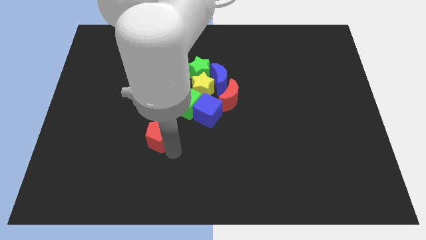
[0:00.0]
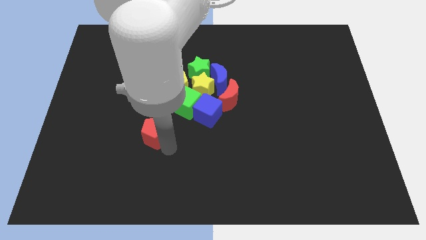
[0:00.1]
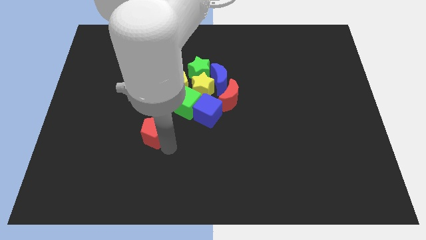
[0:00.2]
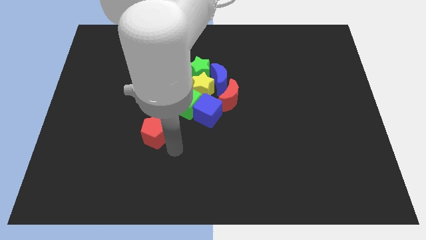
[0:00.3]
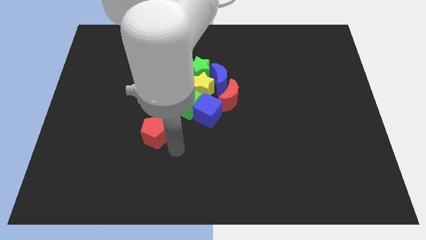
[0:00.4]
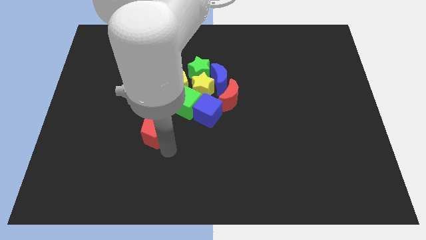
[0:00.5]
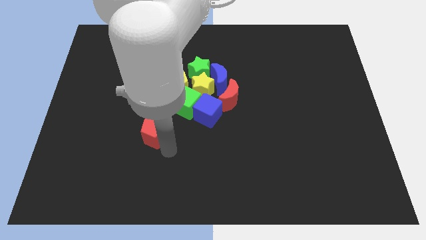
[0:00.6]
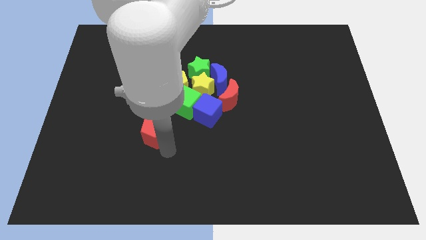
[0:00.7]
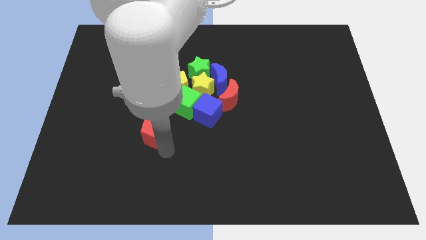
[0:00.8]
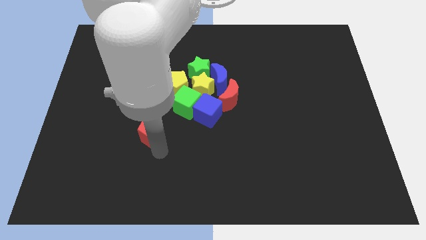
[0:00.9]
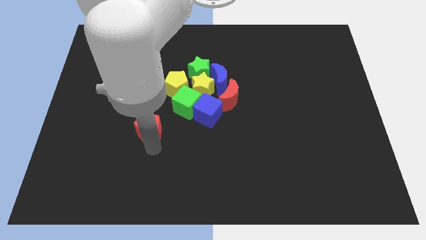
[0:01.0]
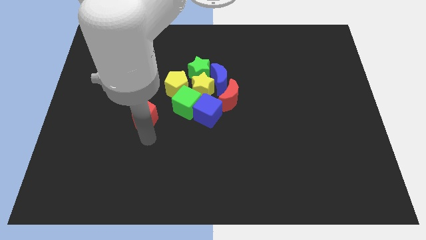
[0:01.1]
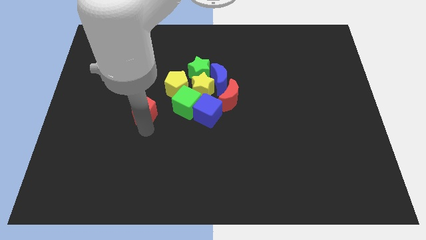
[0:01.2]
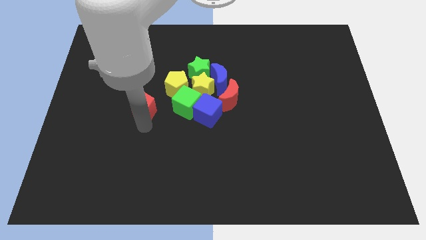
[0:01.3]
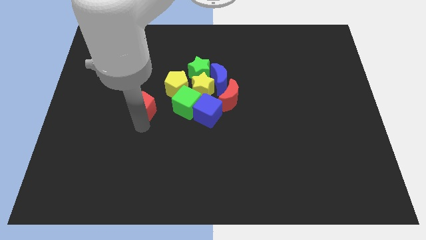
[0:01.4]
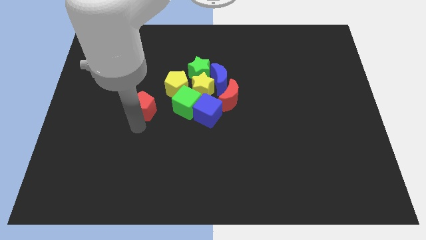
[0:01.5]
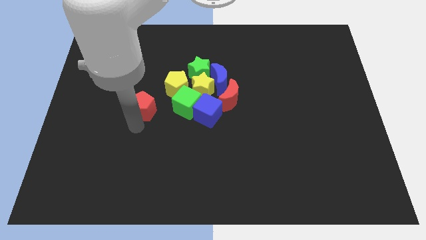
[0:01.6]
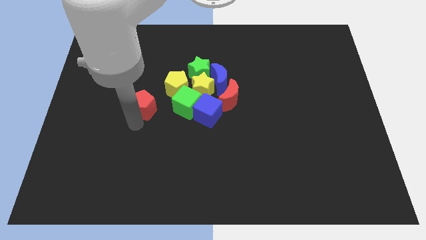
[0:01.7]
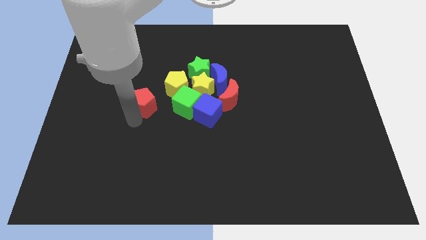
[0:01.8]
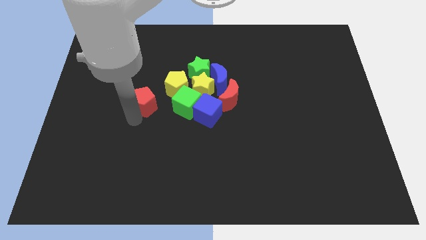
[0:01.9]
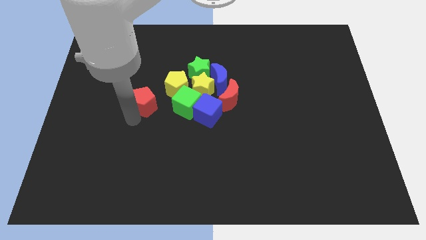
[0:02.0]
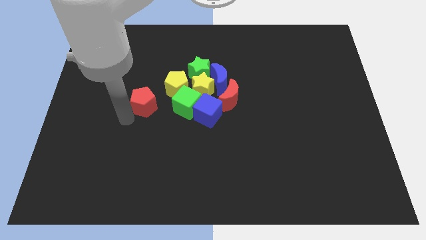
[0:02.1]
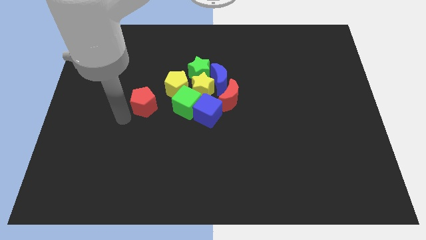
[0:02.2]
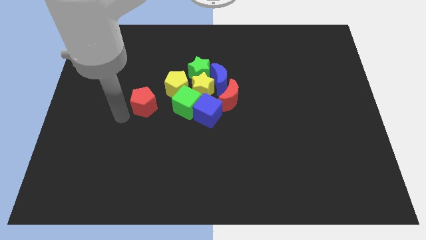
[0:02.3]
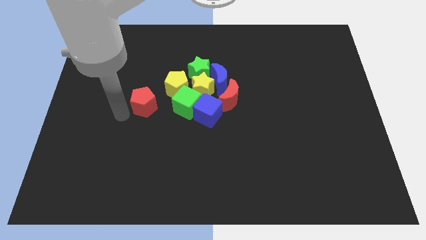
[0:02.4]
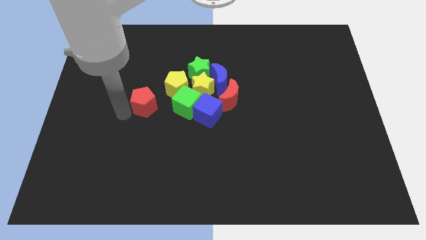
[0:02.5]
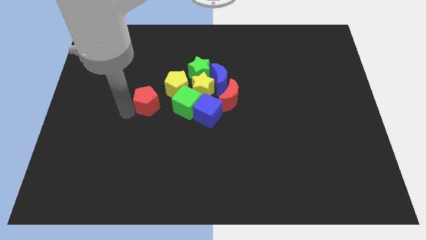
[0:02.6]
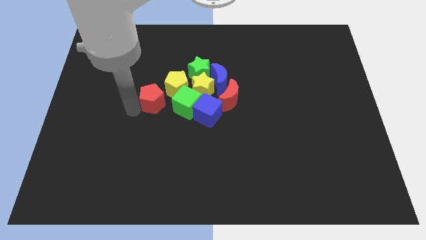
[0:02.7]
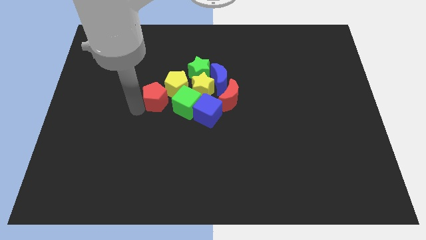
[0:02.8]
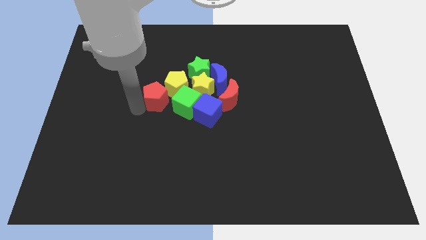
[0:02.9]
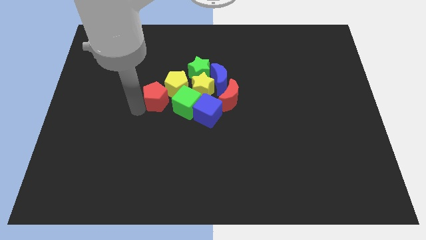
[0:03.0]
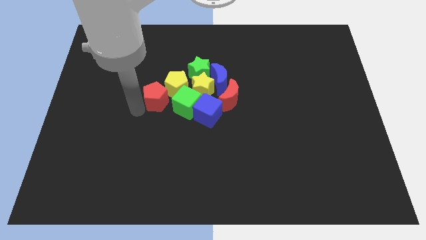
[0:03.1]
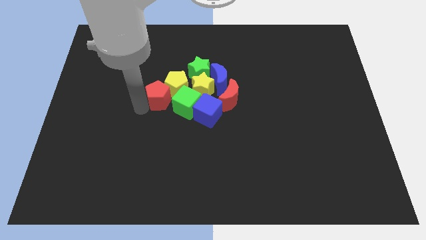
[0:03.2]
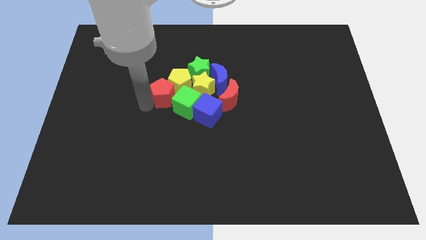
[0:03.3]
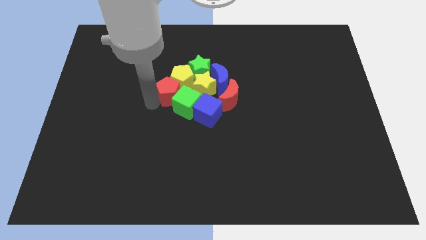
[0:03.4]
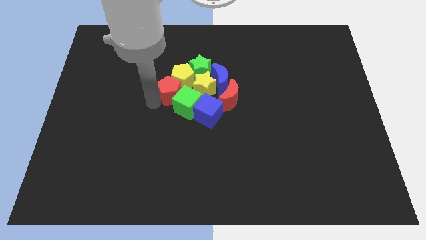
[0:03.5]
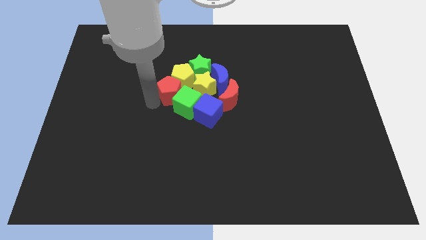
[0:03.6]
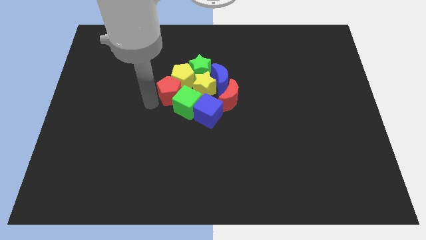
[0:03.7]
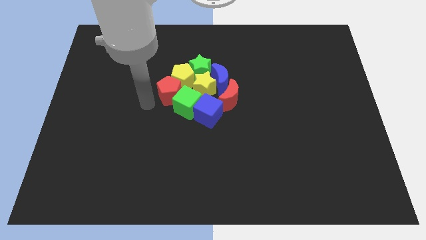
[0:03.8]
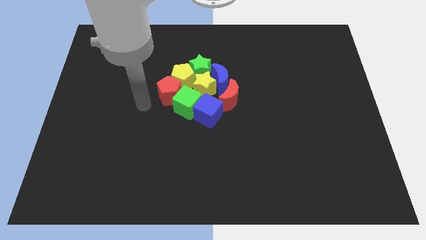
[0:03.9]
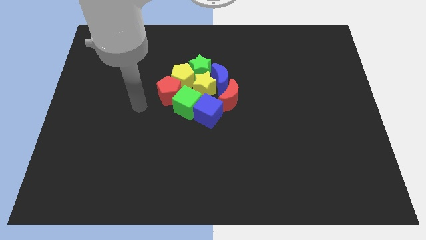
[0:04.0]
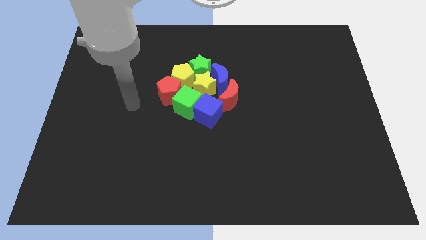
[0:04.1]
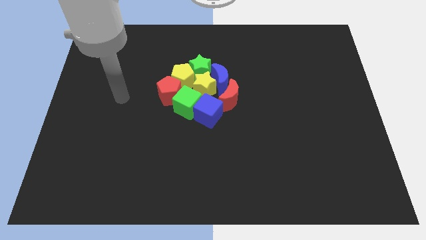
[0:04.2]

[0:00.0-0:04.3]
push red pentagon into group of blocks

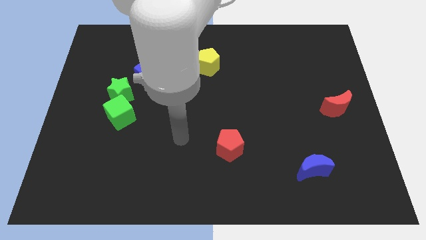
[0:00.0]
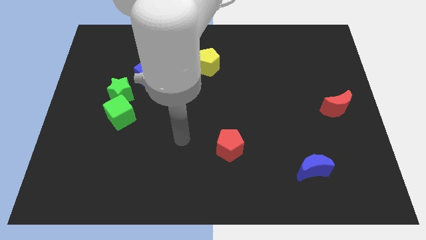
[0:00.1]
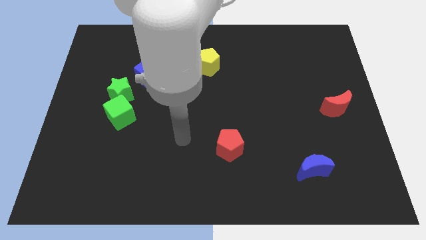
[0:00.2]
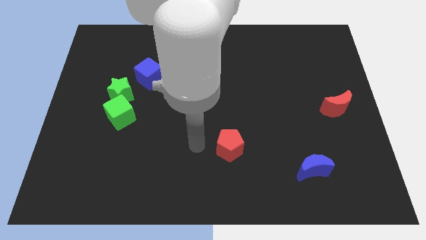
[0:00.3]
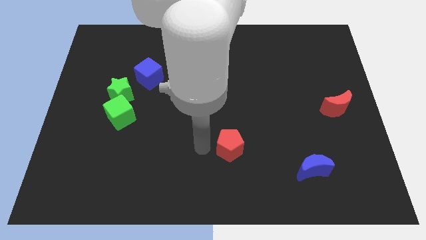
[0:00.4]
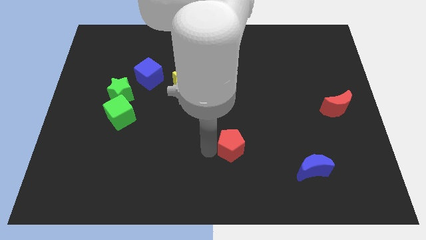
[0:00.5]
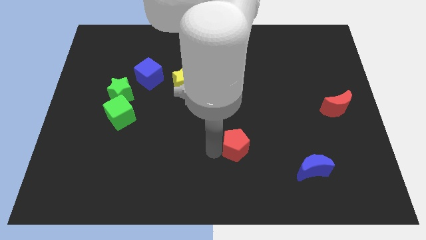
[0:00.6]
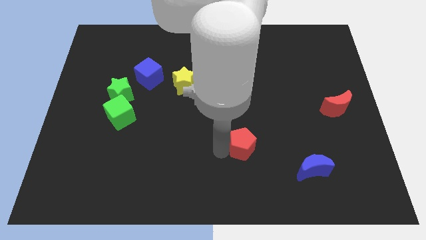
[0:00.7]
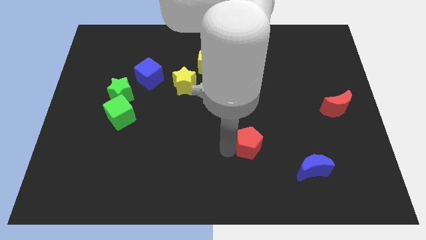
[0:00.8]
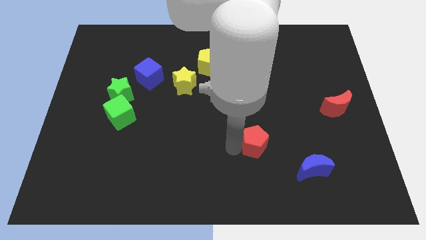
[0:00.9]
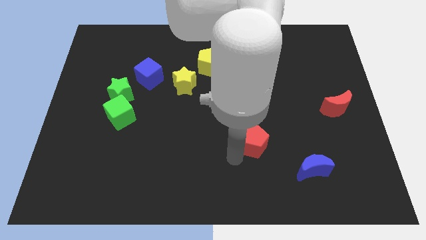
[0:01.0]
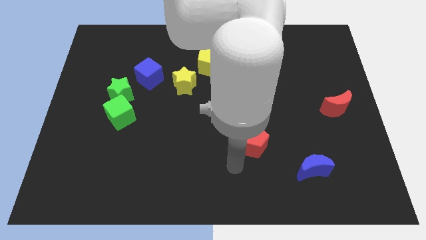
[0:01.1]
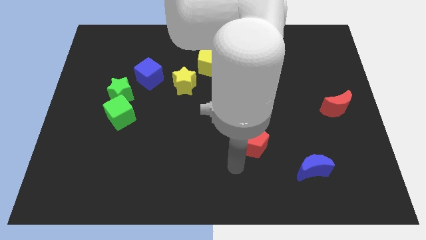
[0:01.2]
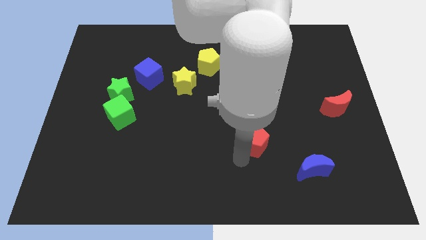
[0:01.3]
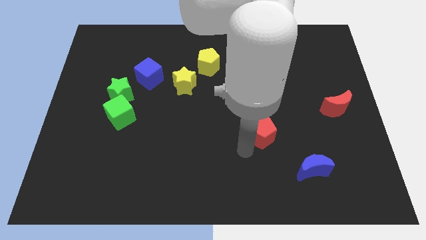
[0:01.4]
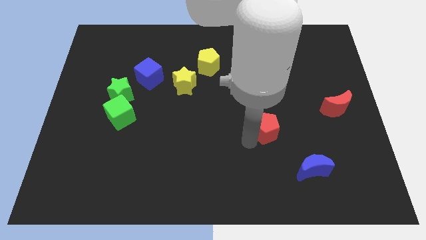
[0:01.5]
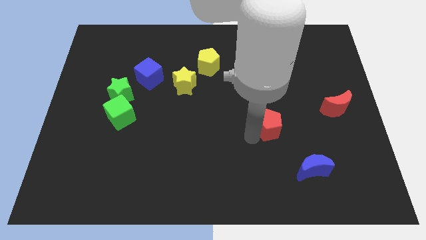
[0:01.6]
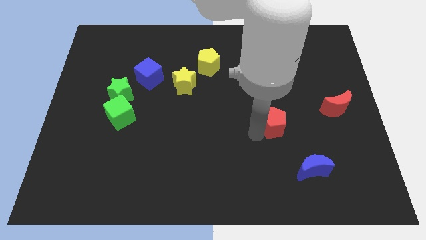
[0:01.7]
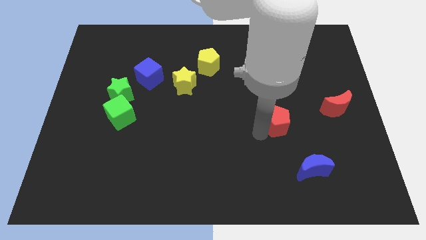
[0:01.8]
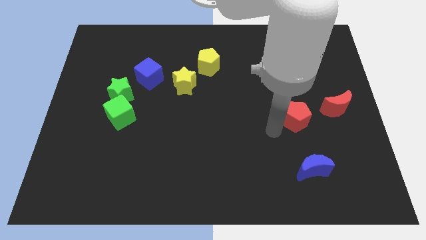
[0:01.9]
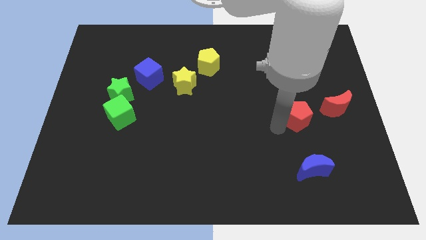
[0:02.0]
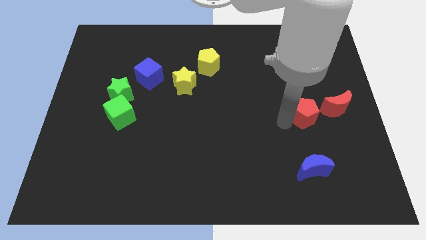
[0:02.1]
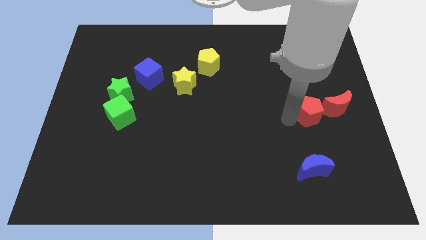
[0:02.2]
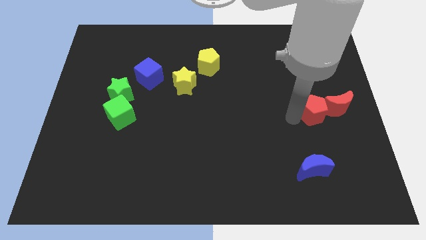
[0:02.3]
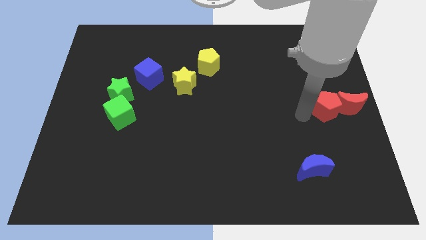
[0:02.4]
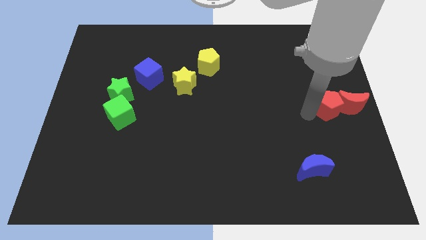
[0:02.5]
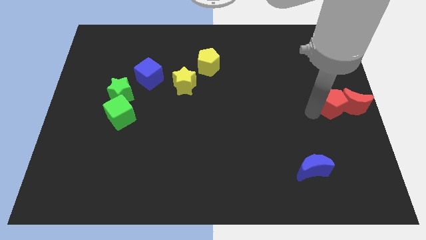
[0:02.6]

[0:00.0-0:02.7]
move the red pentagon into the red crescent

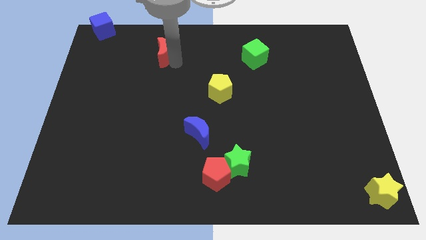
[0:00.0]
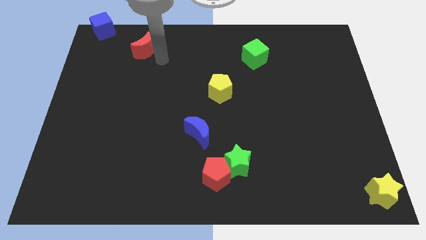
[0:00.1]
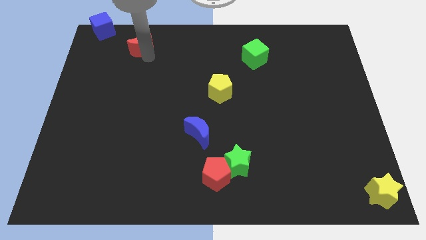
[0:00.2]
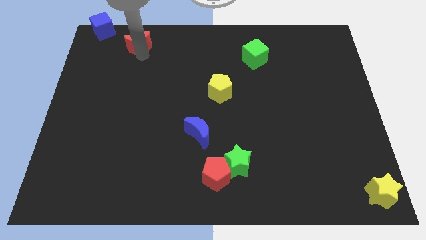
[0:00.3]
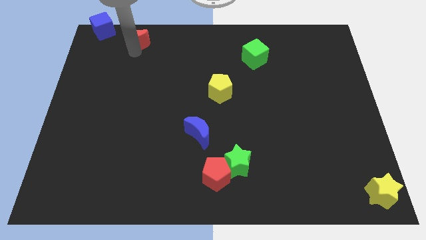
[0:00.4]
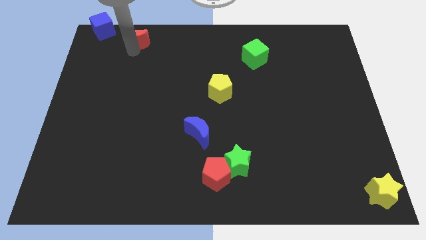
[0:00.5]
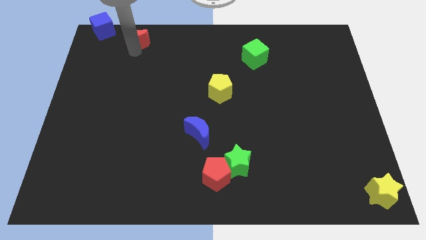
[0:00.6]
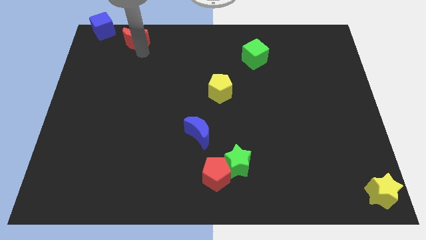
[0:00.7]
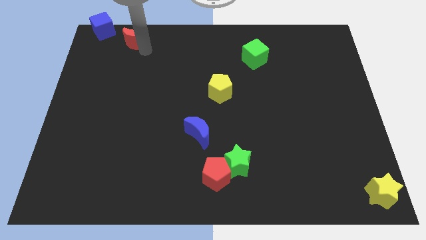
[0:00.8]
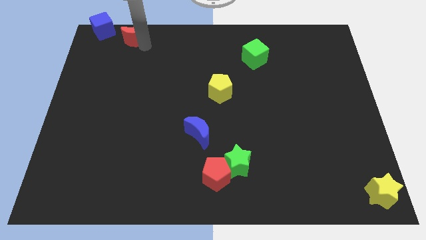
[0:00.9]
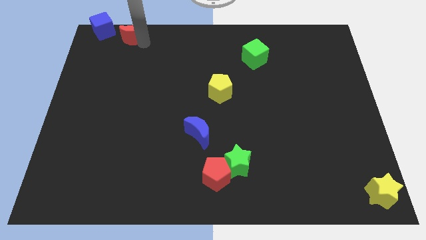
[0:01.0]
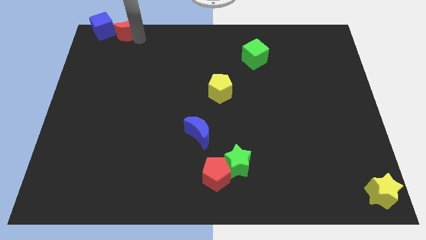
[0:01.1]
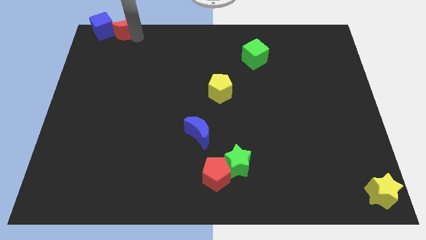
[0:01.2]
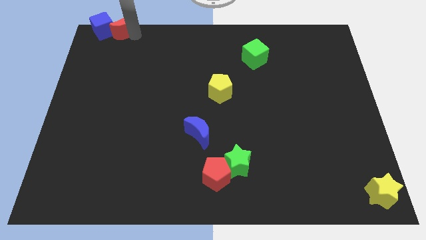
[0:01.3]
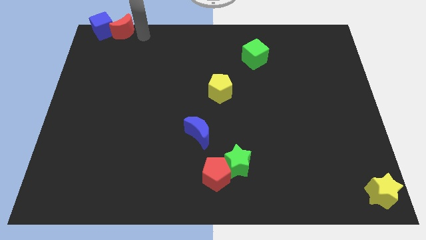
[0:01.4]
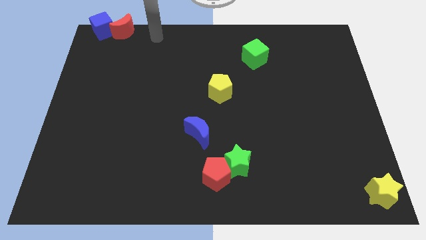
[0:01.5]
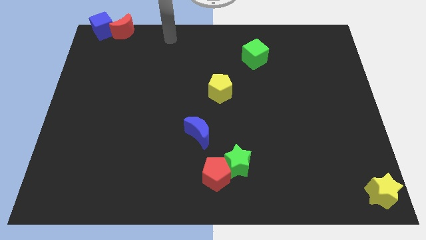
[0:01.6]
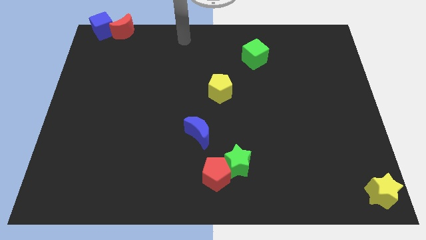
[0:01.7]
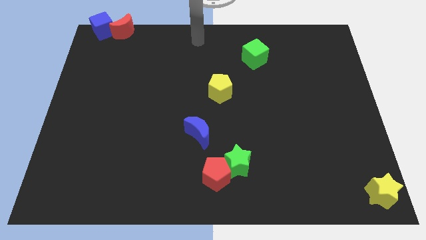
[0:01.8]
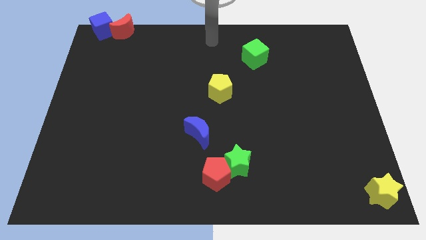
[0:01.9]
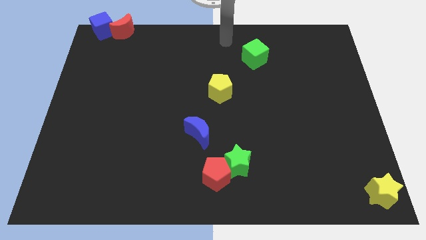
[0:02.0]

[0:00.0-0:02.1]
push the red moon into blue cube
